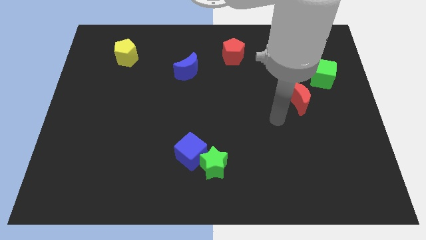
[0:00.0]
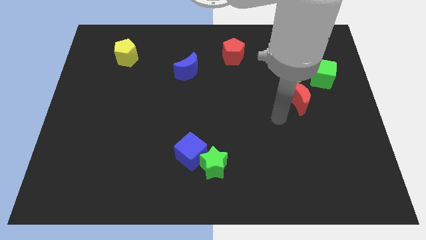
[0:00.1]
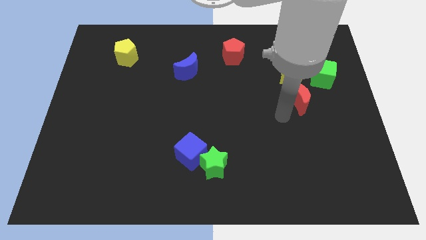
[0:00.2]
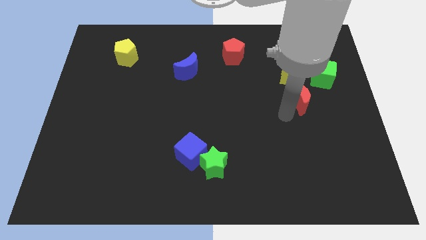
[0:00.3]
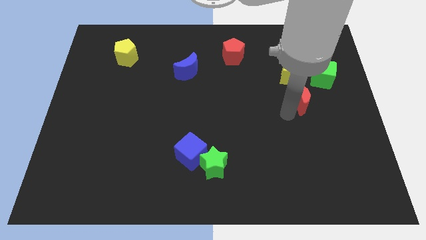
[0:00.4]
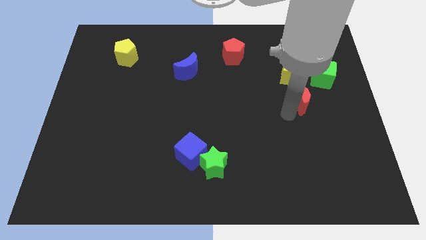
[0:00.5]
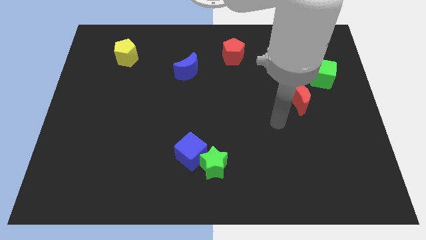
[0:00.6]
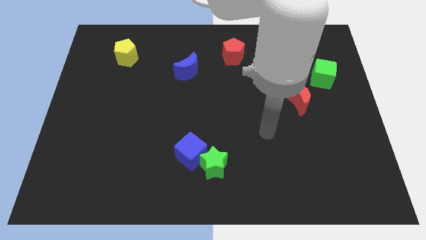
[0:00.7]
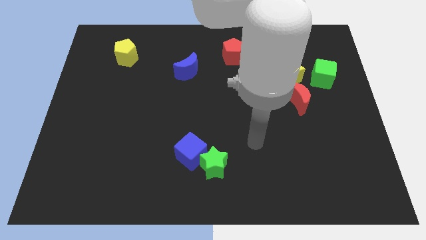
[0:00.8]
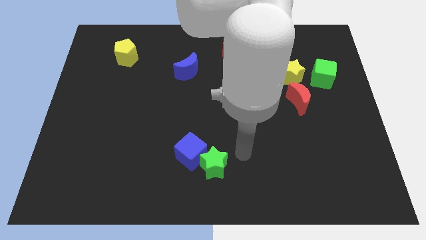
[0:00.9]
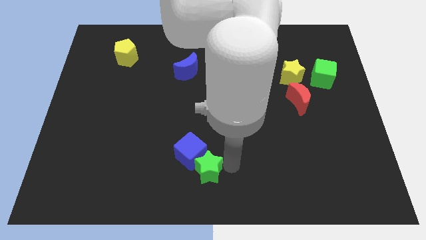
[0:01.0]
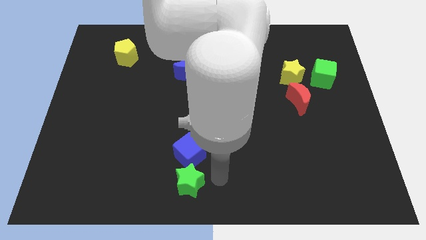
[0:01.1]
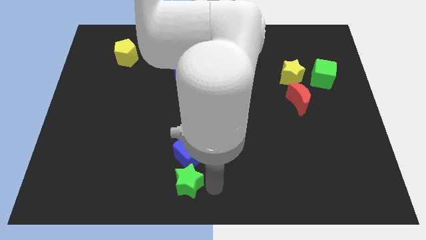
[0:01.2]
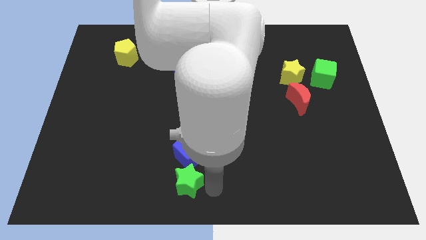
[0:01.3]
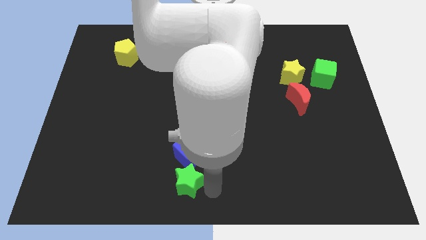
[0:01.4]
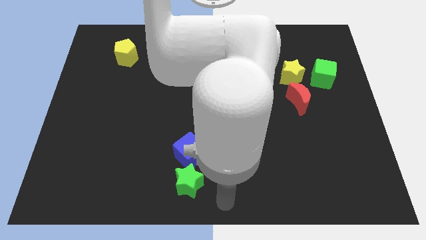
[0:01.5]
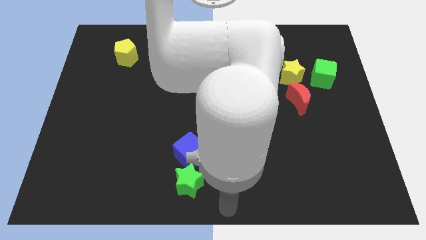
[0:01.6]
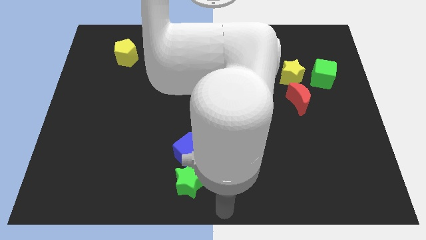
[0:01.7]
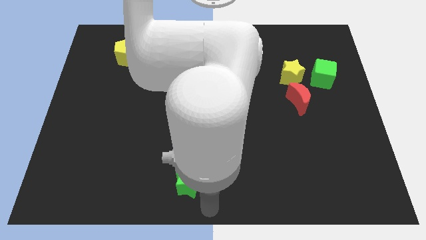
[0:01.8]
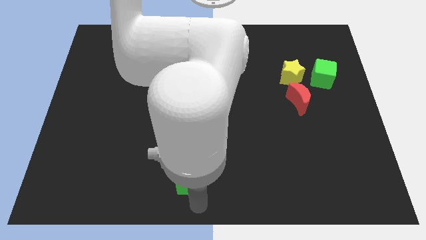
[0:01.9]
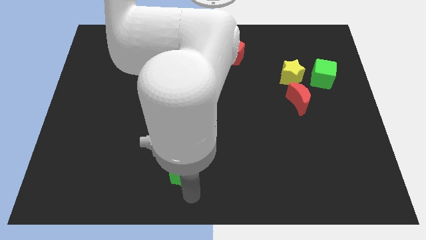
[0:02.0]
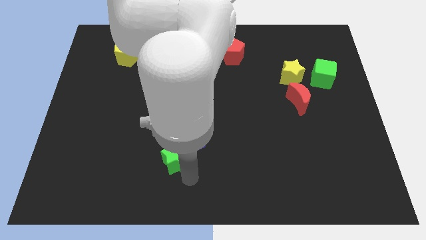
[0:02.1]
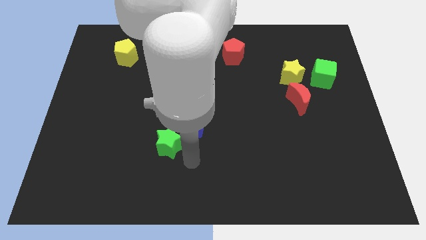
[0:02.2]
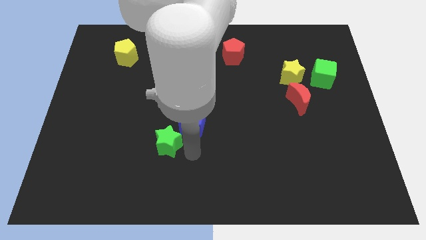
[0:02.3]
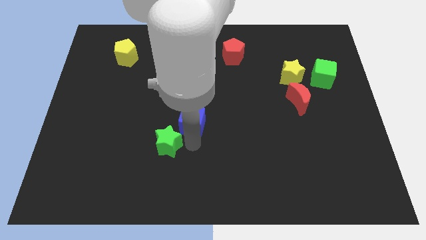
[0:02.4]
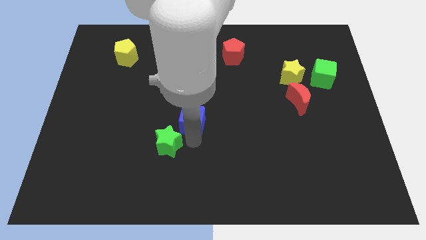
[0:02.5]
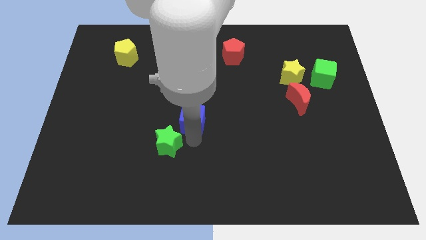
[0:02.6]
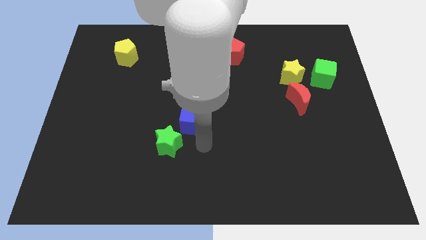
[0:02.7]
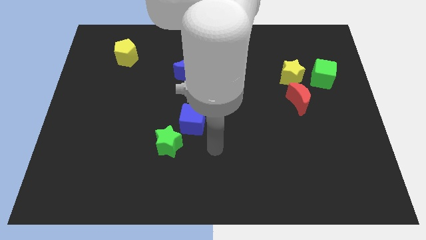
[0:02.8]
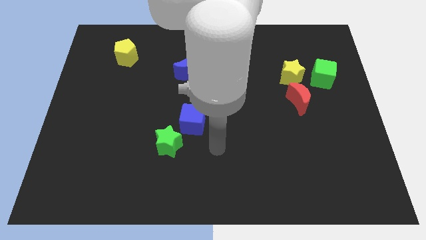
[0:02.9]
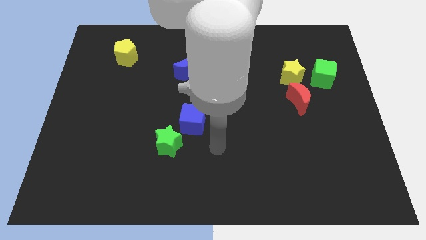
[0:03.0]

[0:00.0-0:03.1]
push the green star and blue cube towards the center of the board

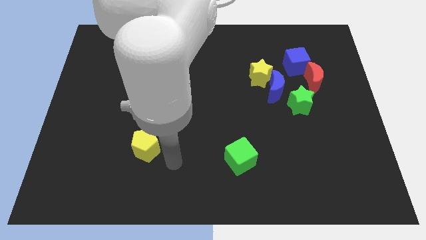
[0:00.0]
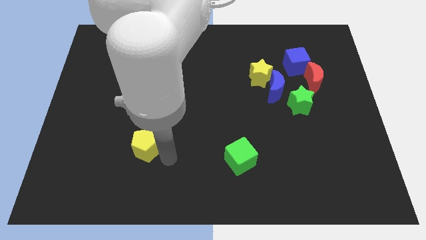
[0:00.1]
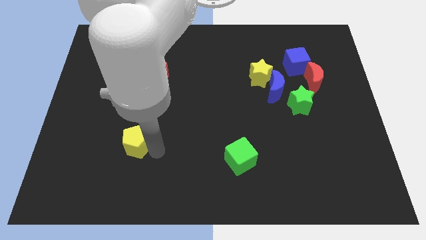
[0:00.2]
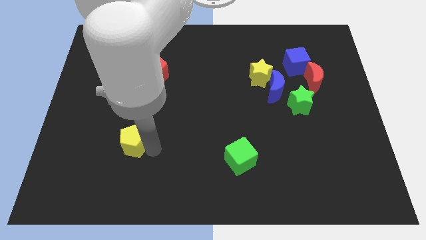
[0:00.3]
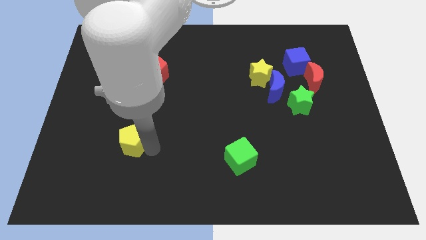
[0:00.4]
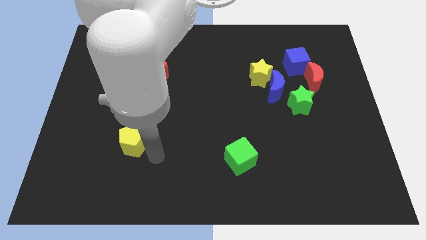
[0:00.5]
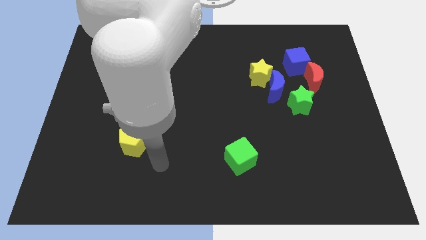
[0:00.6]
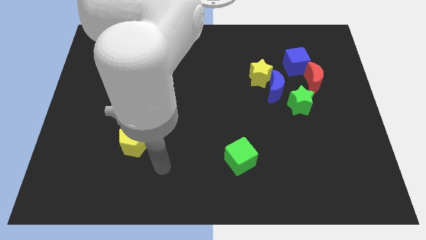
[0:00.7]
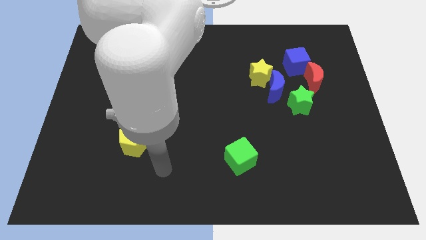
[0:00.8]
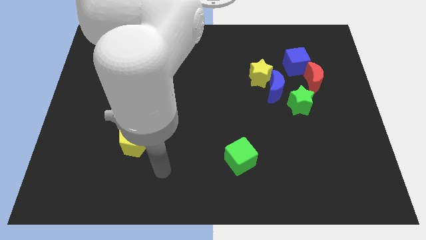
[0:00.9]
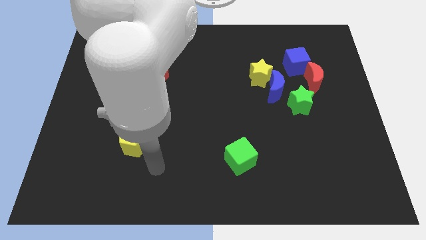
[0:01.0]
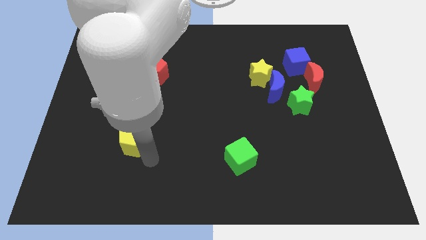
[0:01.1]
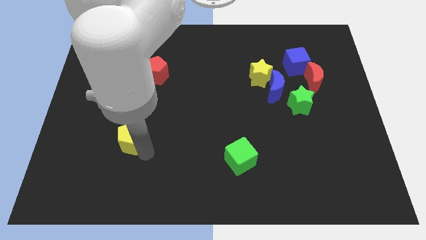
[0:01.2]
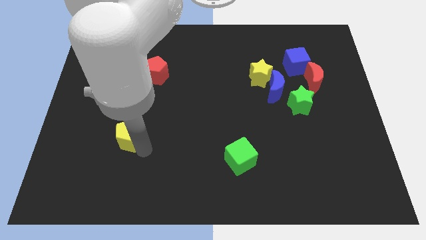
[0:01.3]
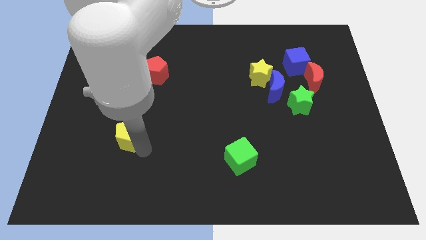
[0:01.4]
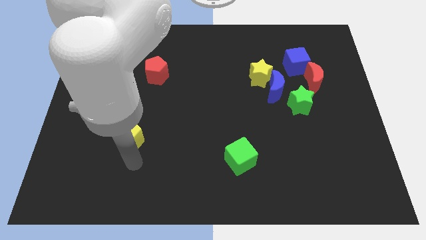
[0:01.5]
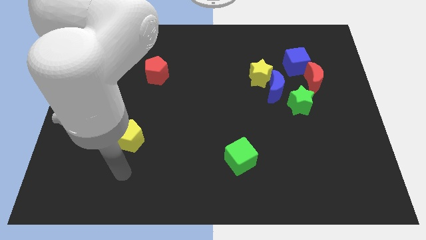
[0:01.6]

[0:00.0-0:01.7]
push yellow pentagon slightly upwards

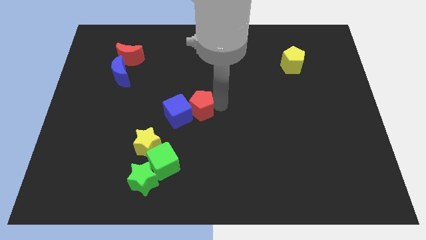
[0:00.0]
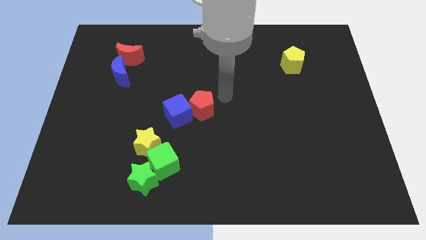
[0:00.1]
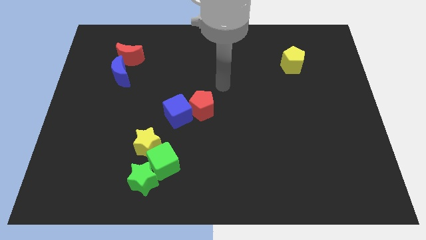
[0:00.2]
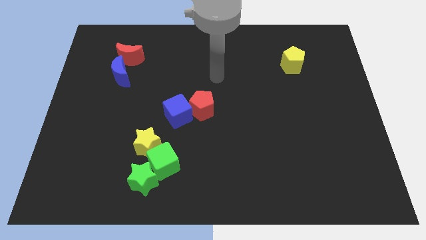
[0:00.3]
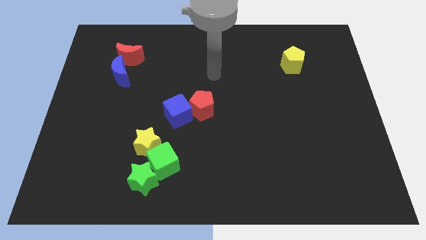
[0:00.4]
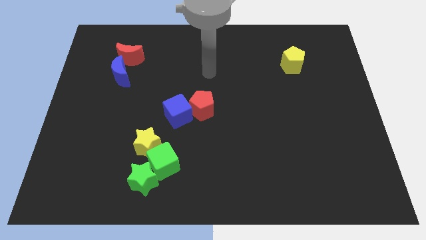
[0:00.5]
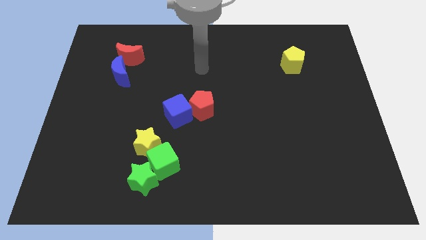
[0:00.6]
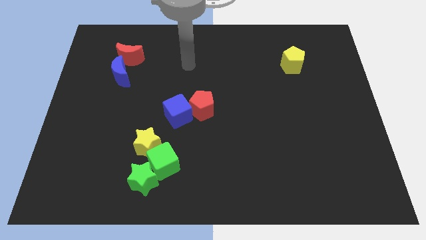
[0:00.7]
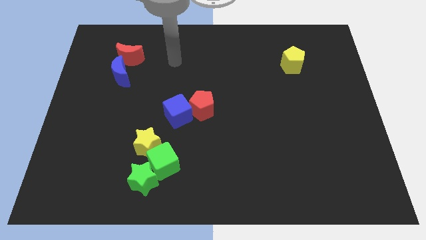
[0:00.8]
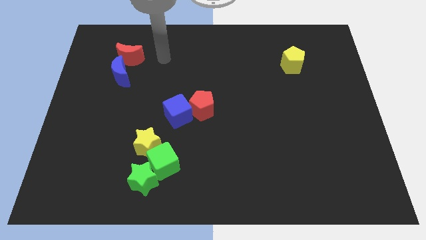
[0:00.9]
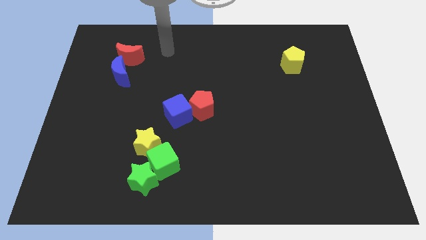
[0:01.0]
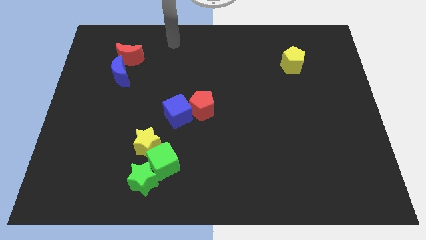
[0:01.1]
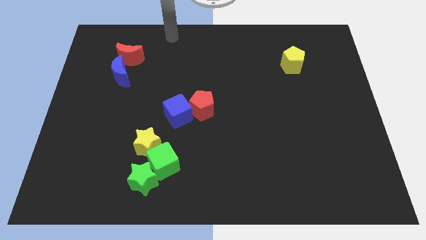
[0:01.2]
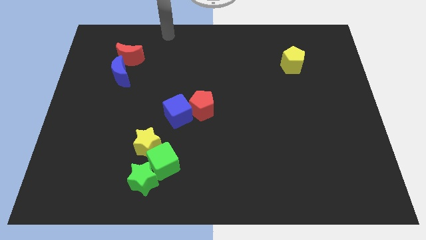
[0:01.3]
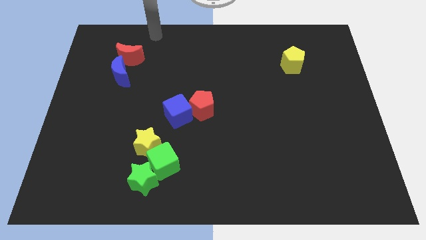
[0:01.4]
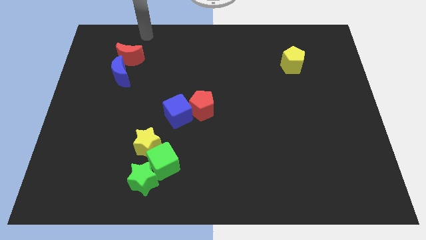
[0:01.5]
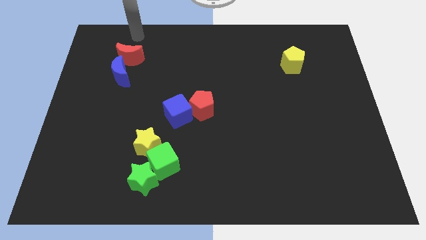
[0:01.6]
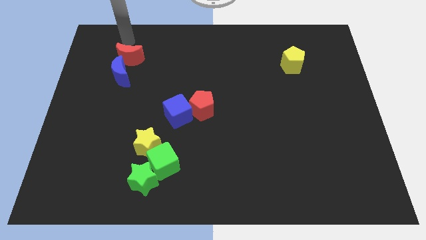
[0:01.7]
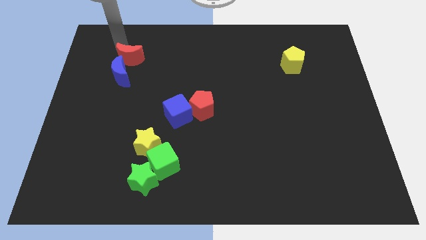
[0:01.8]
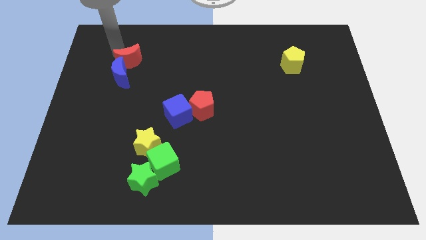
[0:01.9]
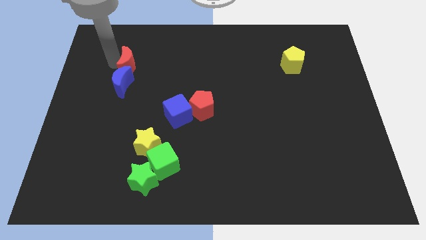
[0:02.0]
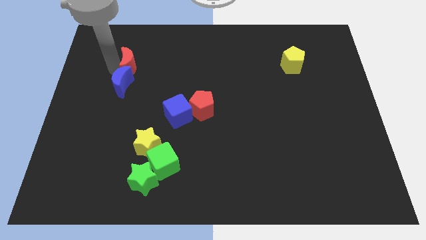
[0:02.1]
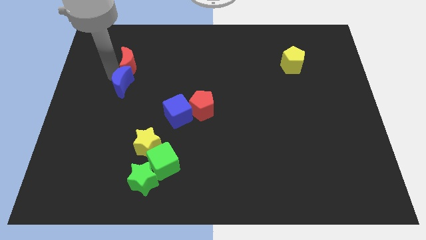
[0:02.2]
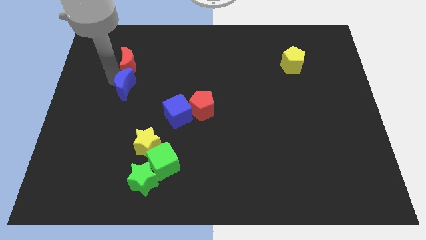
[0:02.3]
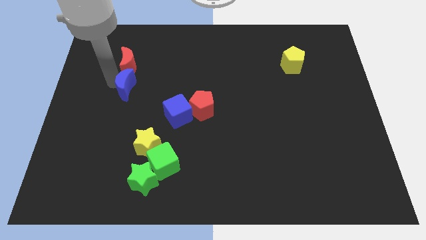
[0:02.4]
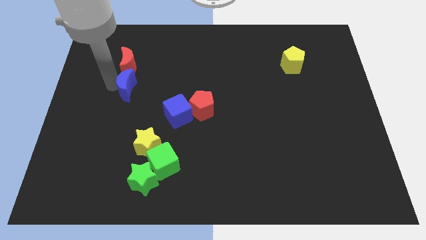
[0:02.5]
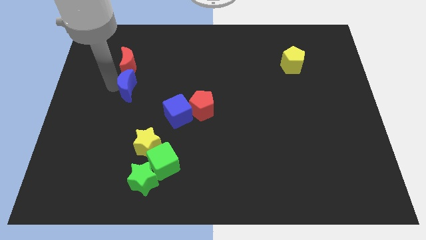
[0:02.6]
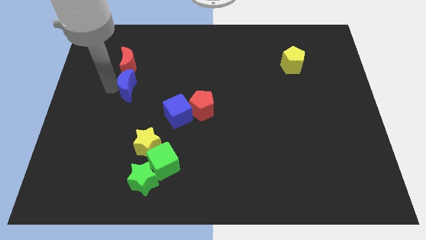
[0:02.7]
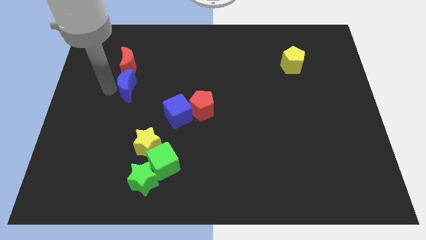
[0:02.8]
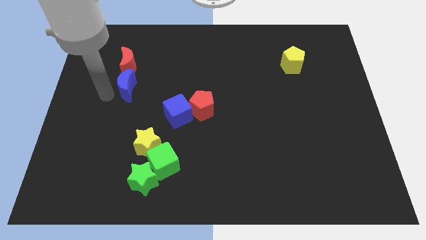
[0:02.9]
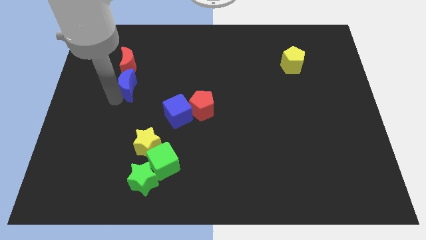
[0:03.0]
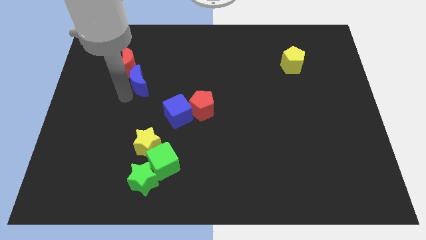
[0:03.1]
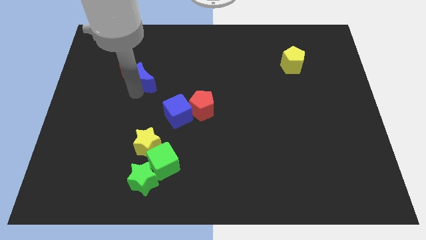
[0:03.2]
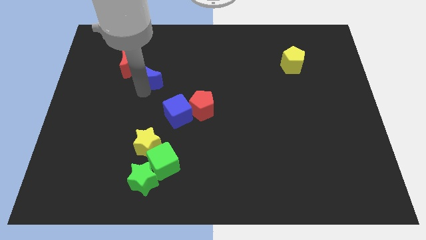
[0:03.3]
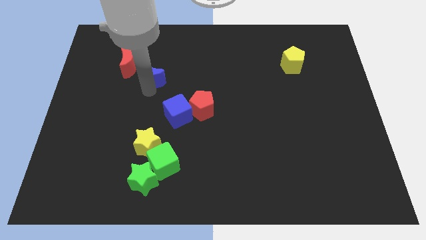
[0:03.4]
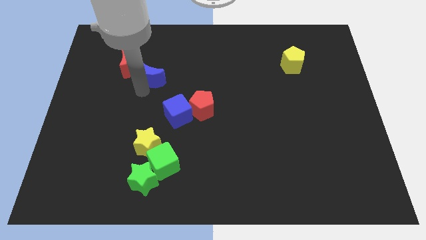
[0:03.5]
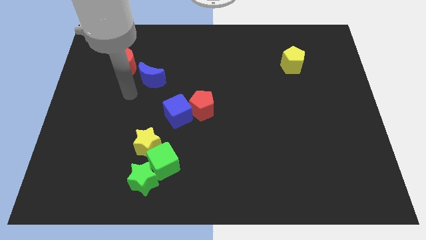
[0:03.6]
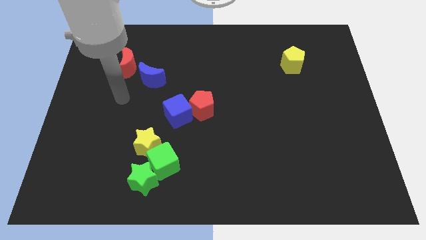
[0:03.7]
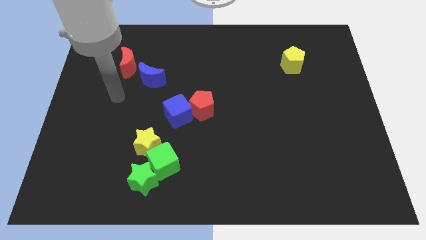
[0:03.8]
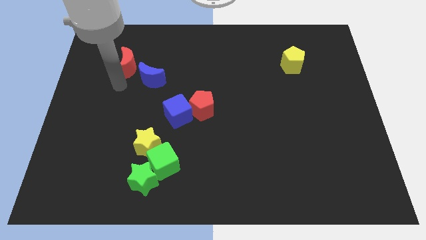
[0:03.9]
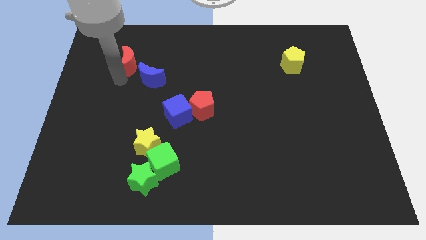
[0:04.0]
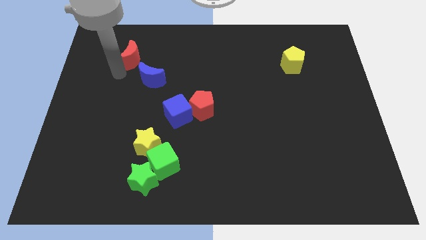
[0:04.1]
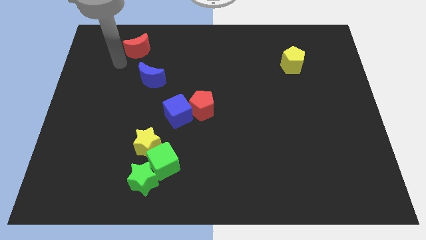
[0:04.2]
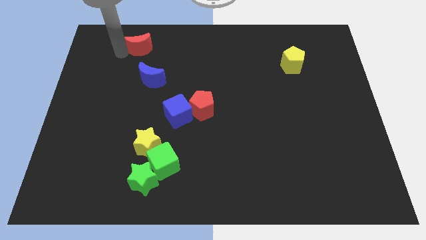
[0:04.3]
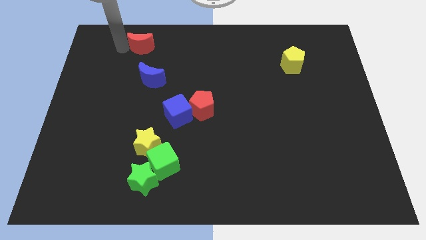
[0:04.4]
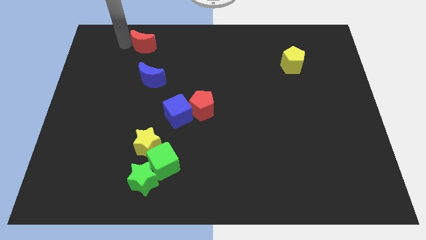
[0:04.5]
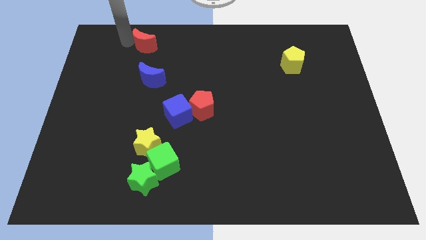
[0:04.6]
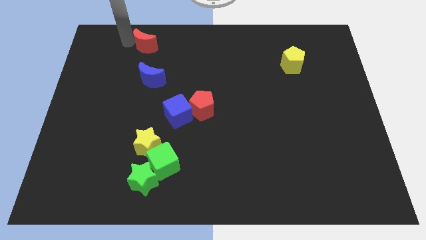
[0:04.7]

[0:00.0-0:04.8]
move the crescents to the right of the board
